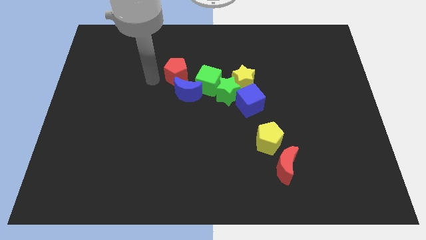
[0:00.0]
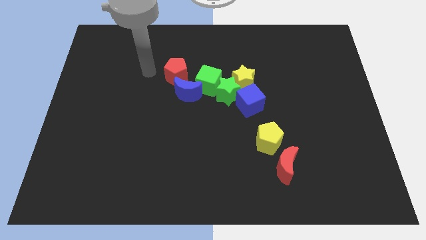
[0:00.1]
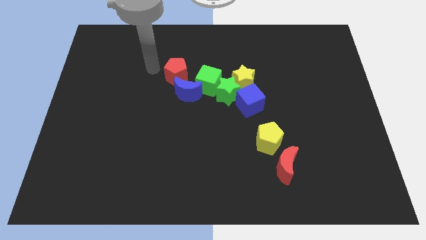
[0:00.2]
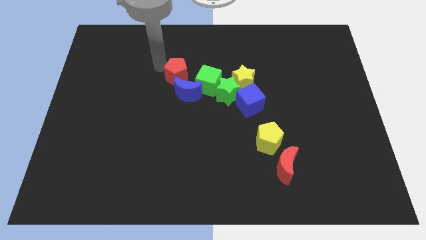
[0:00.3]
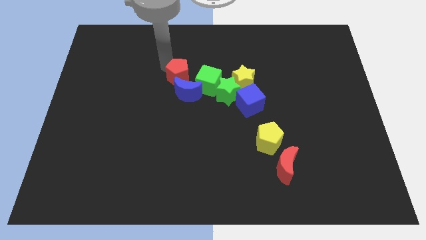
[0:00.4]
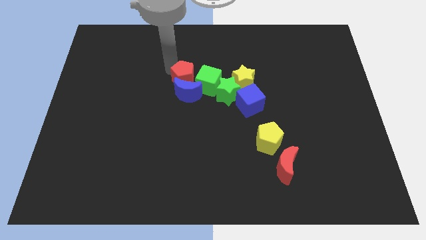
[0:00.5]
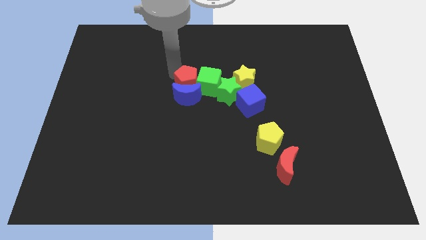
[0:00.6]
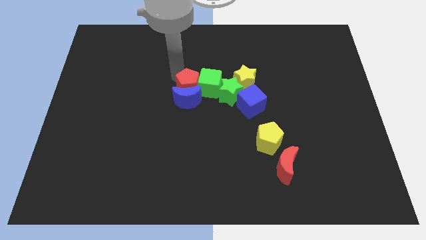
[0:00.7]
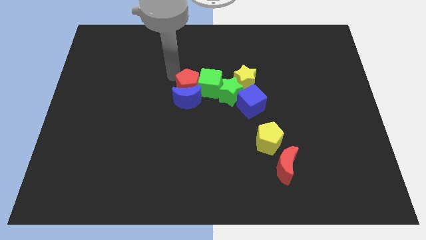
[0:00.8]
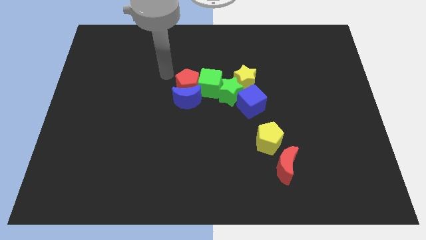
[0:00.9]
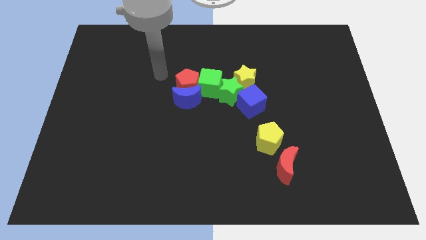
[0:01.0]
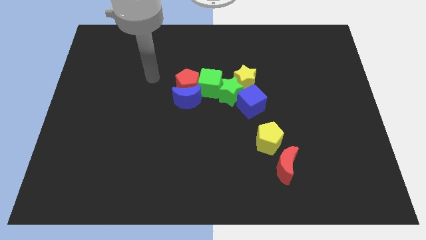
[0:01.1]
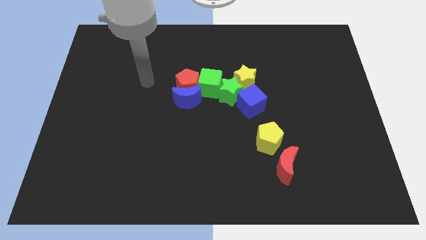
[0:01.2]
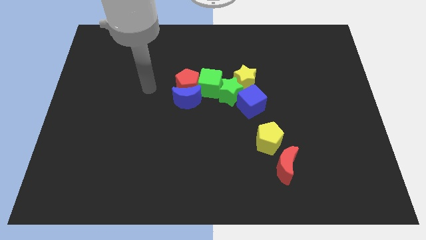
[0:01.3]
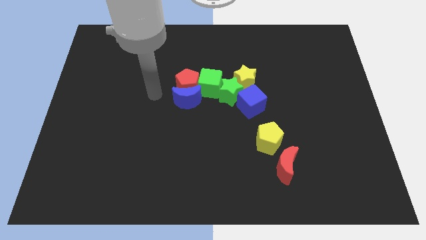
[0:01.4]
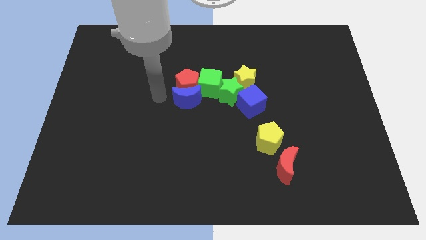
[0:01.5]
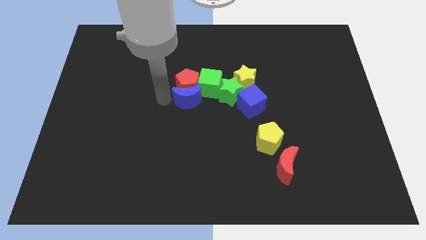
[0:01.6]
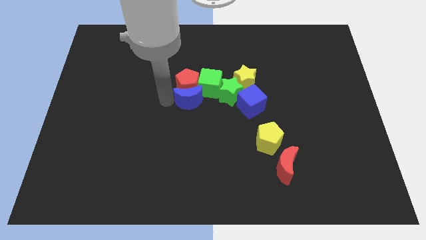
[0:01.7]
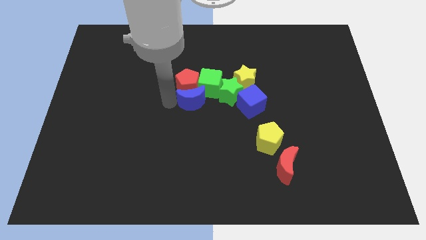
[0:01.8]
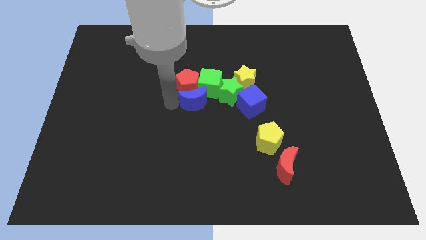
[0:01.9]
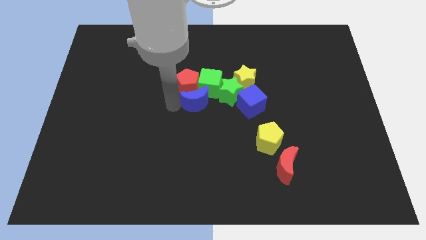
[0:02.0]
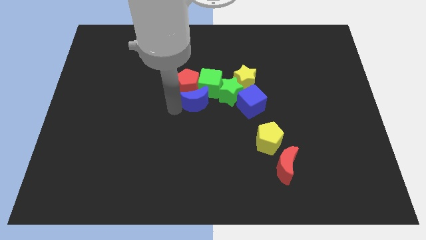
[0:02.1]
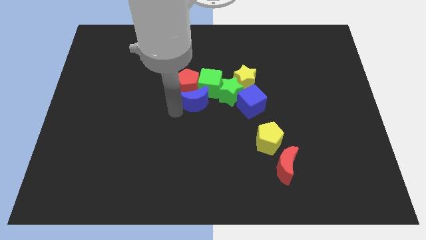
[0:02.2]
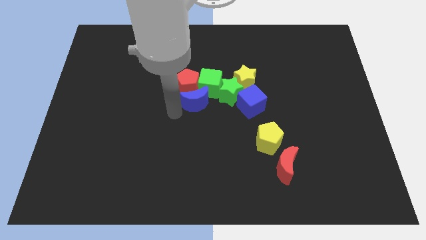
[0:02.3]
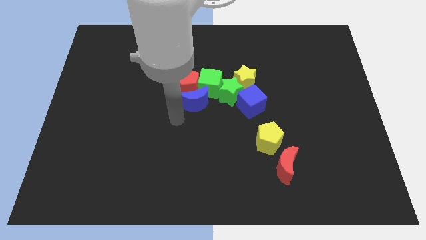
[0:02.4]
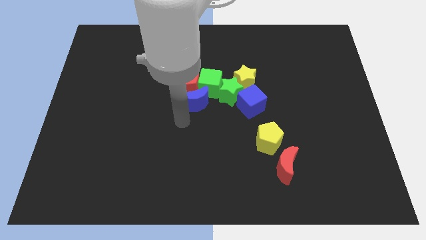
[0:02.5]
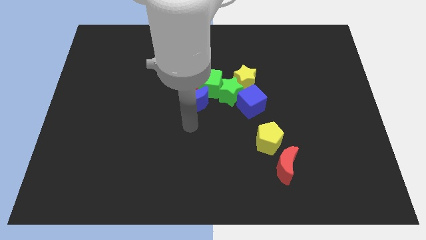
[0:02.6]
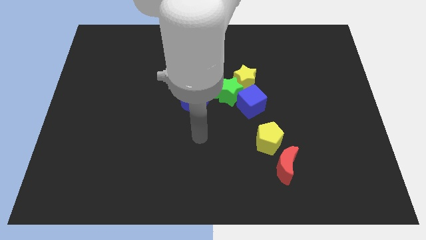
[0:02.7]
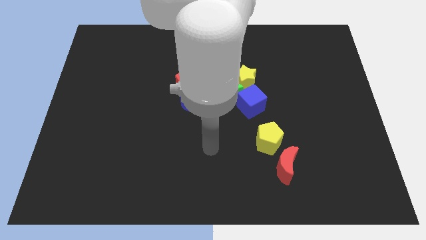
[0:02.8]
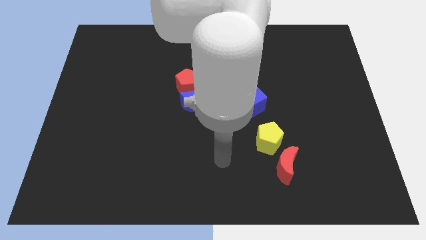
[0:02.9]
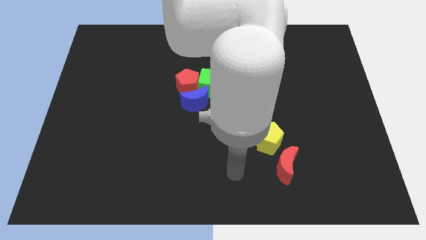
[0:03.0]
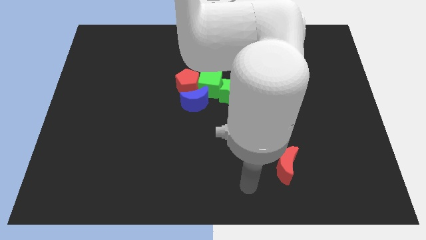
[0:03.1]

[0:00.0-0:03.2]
move your hand to the left side of the red crescent

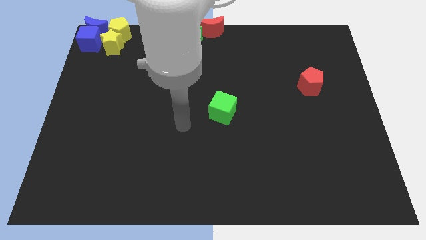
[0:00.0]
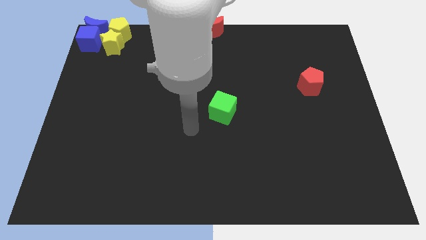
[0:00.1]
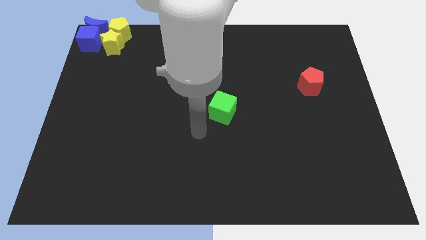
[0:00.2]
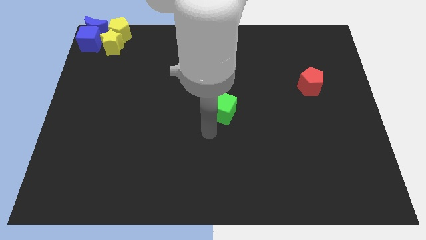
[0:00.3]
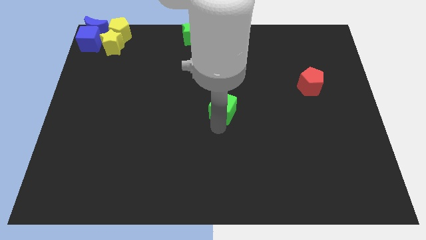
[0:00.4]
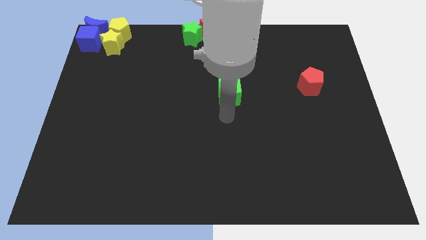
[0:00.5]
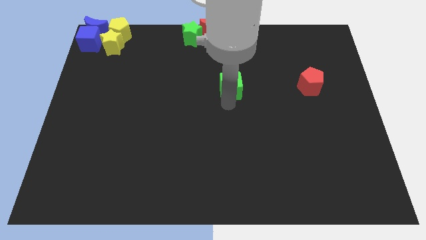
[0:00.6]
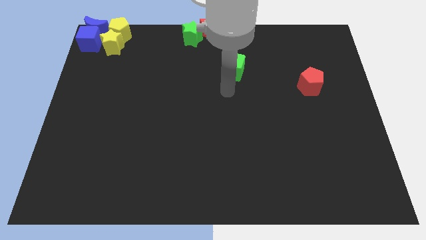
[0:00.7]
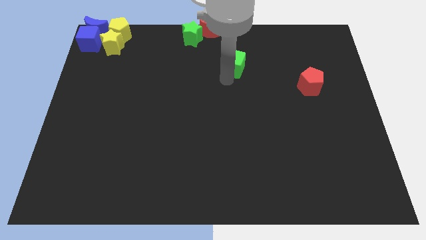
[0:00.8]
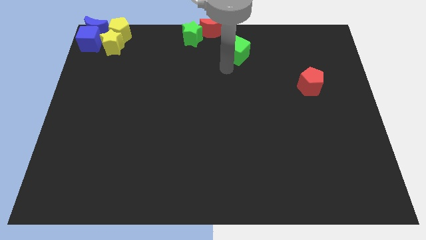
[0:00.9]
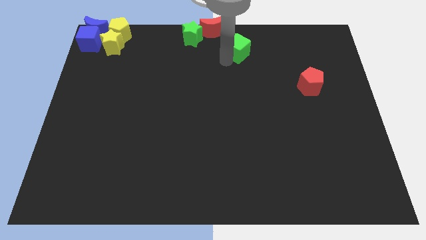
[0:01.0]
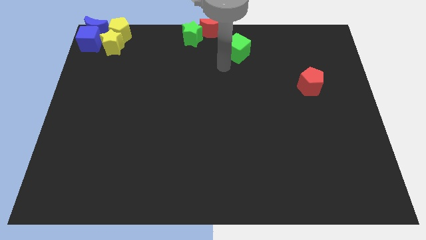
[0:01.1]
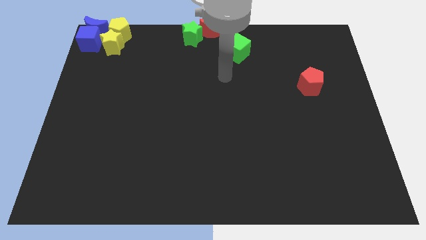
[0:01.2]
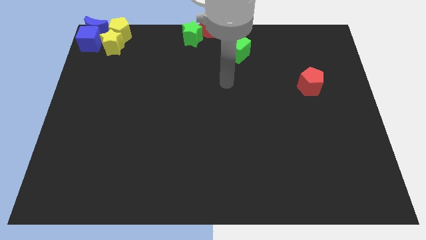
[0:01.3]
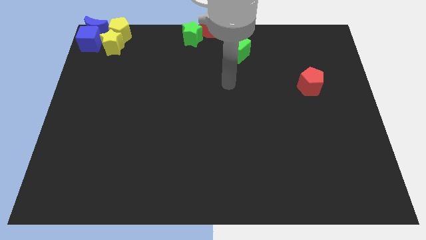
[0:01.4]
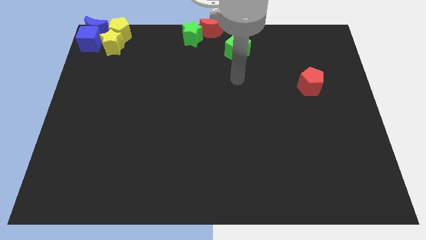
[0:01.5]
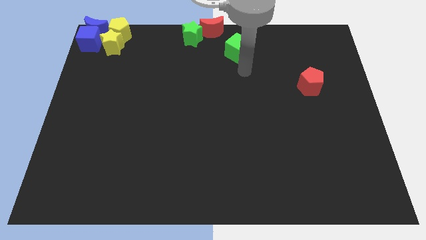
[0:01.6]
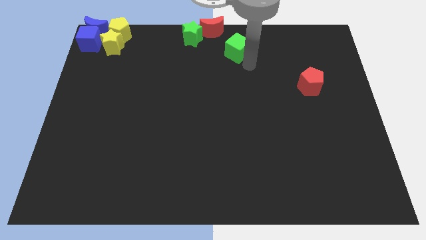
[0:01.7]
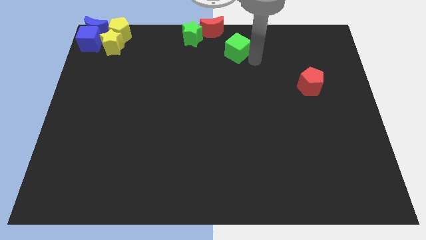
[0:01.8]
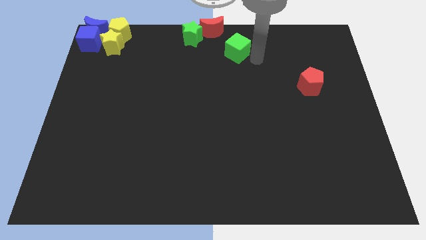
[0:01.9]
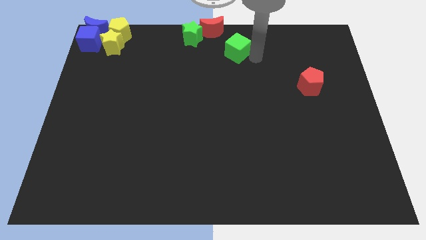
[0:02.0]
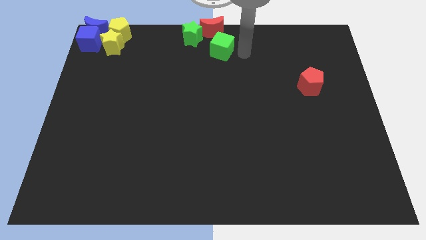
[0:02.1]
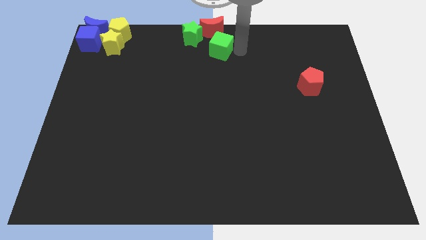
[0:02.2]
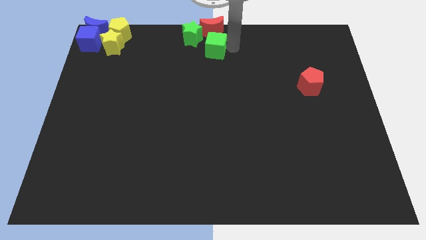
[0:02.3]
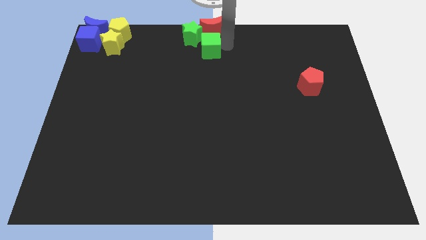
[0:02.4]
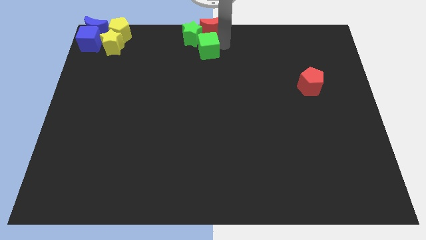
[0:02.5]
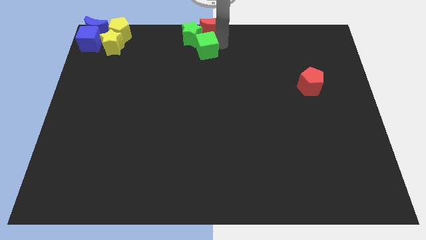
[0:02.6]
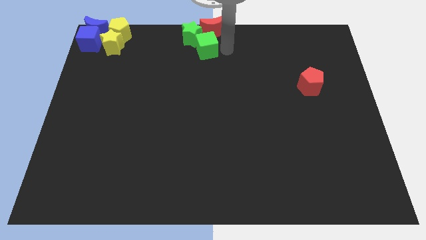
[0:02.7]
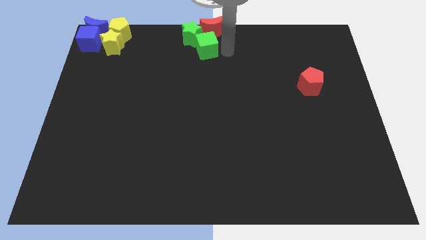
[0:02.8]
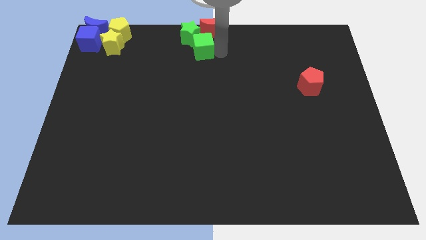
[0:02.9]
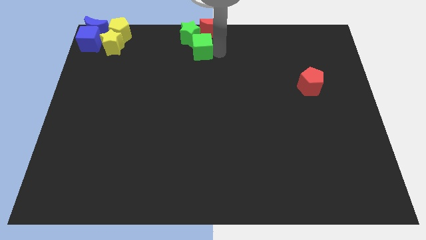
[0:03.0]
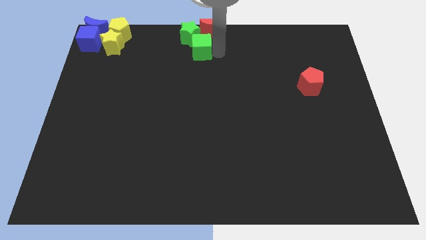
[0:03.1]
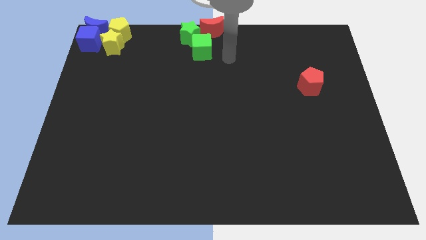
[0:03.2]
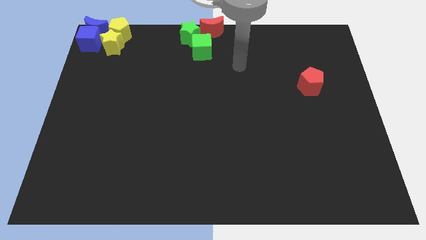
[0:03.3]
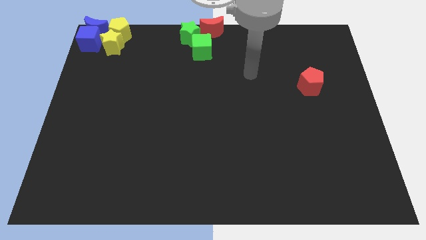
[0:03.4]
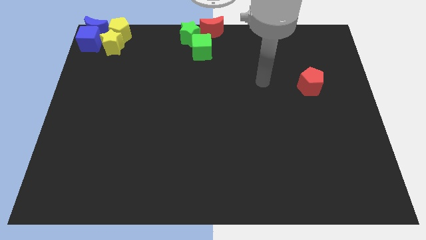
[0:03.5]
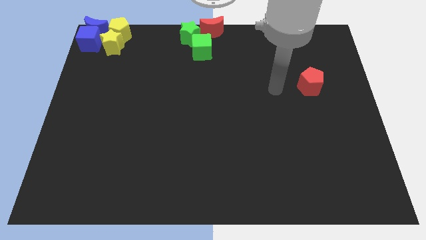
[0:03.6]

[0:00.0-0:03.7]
put green blocks together

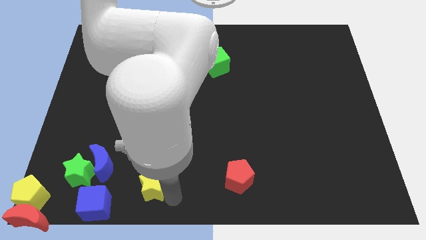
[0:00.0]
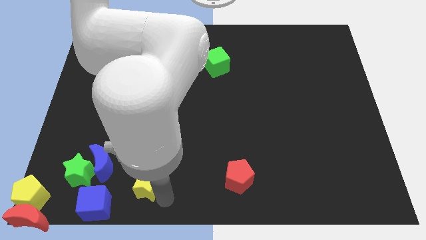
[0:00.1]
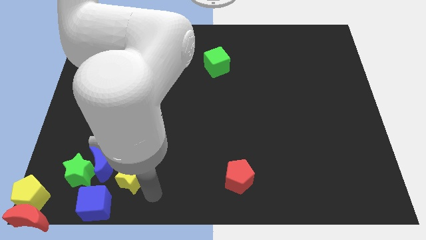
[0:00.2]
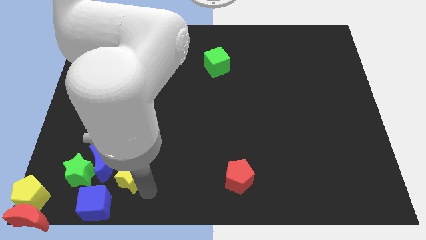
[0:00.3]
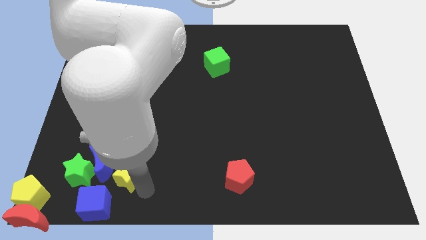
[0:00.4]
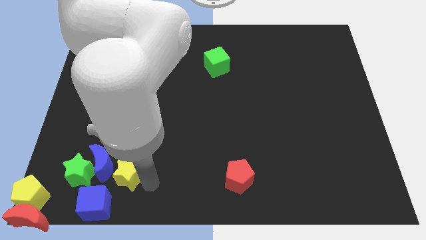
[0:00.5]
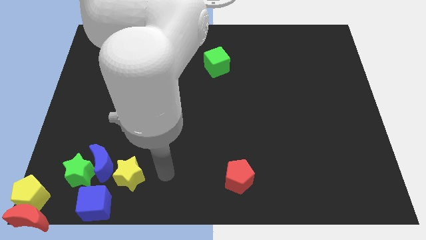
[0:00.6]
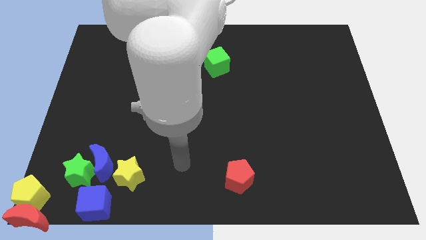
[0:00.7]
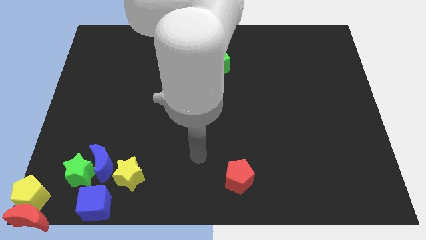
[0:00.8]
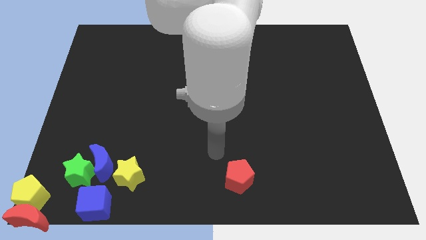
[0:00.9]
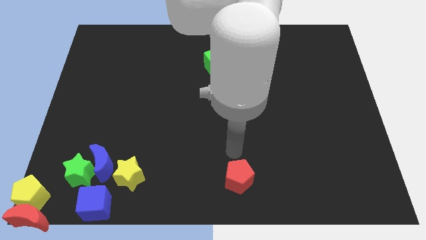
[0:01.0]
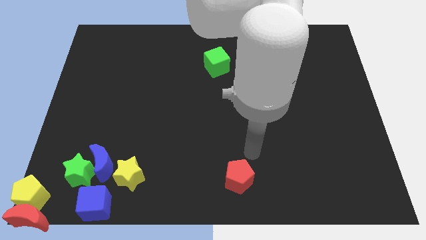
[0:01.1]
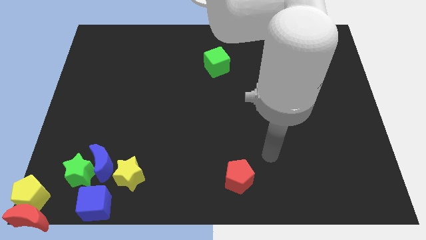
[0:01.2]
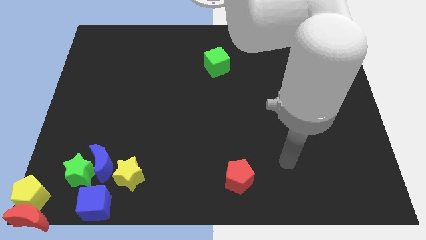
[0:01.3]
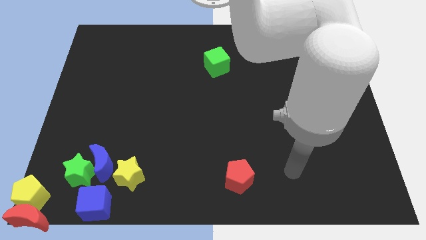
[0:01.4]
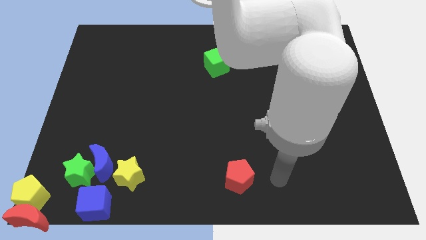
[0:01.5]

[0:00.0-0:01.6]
place the yellow star to the right side of the blue moon

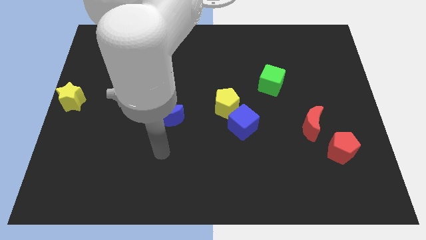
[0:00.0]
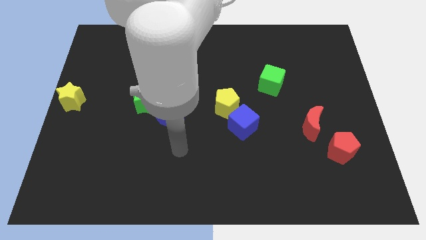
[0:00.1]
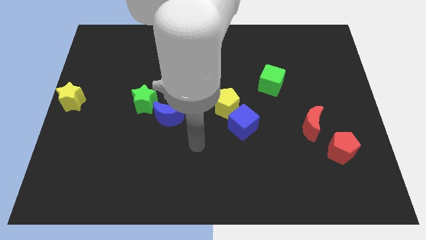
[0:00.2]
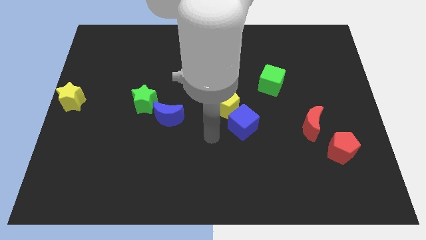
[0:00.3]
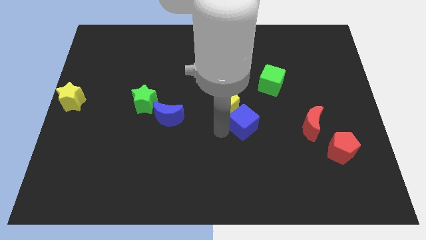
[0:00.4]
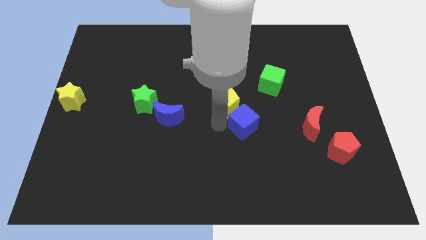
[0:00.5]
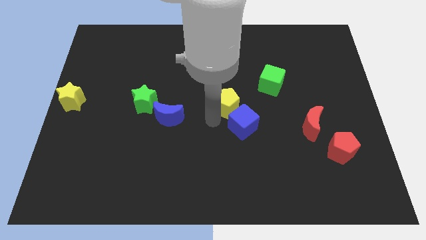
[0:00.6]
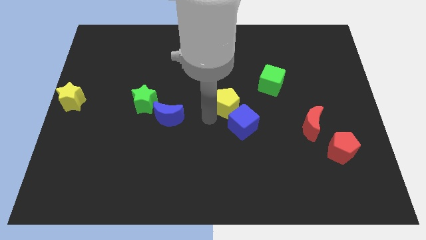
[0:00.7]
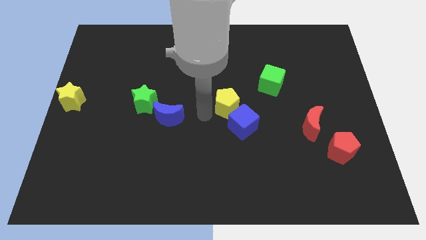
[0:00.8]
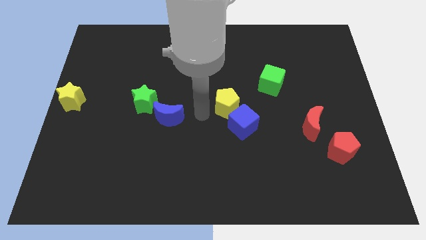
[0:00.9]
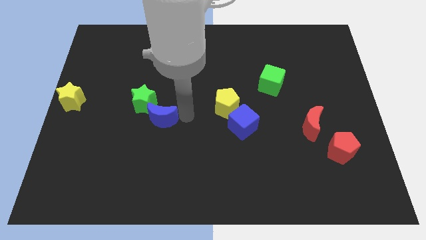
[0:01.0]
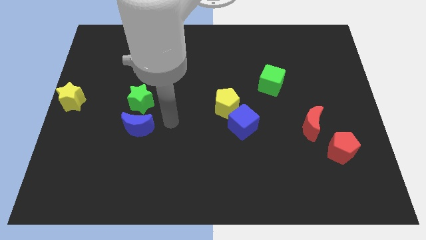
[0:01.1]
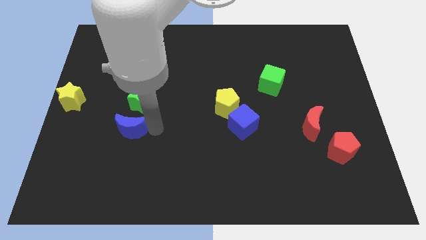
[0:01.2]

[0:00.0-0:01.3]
push the blue crescent below the green star
